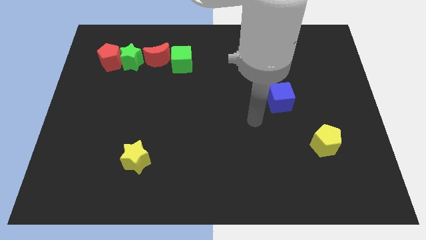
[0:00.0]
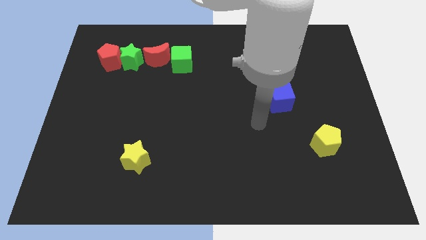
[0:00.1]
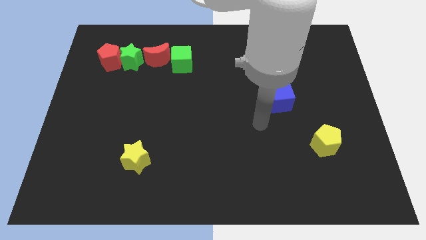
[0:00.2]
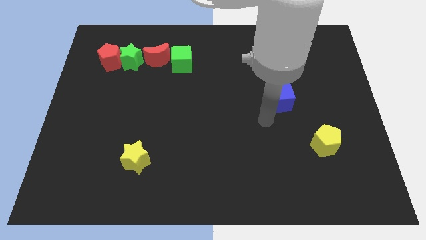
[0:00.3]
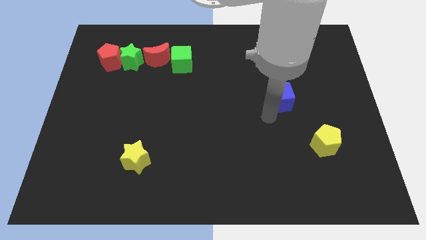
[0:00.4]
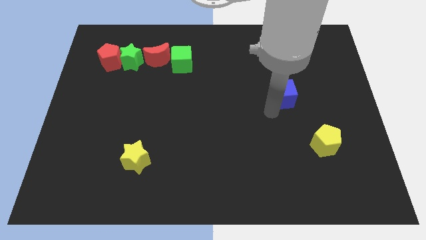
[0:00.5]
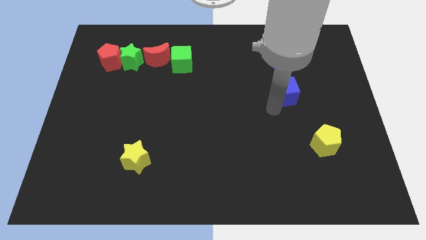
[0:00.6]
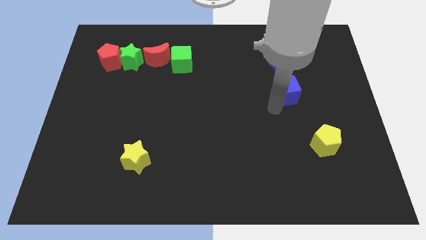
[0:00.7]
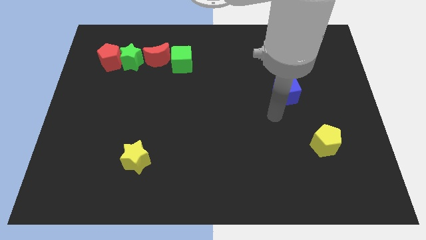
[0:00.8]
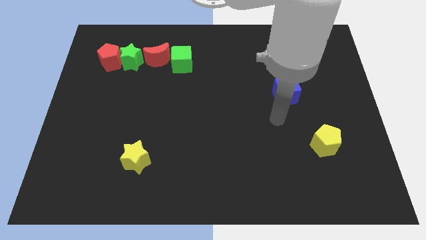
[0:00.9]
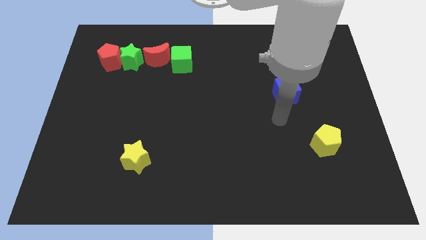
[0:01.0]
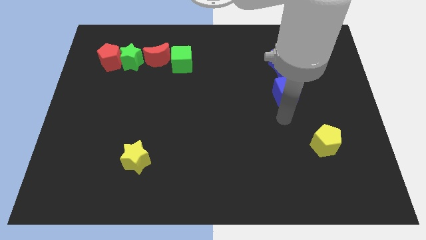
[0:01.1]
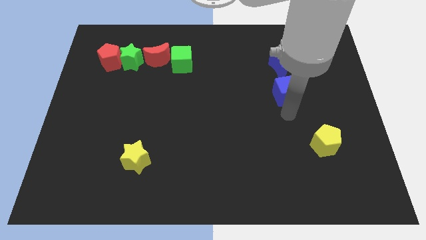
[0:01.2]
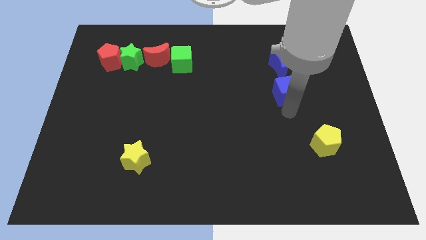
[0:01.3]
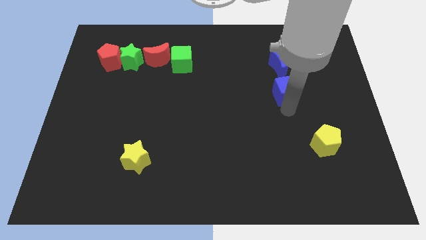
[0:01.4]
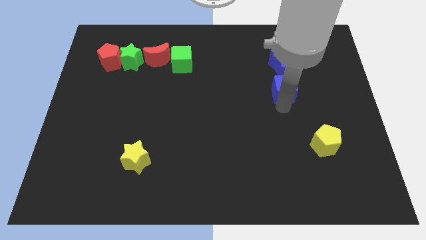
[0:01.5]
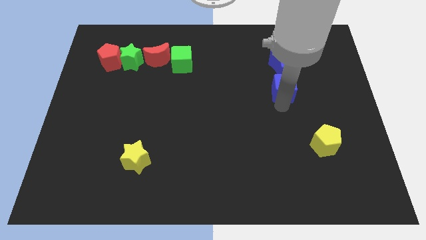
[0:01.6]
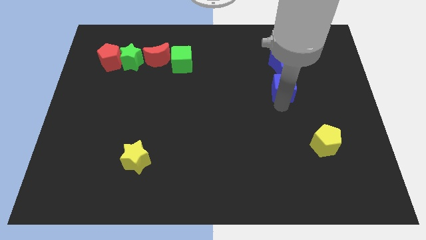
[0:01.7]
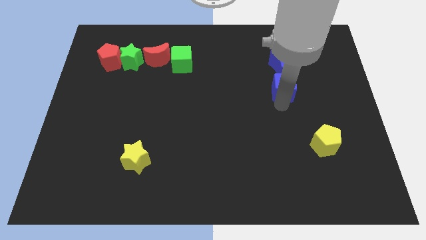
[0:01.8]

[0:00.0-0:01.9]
slightly touch your arm to the blue cube

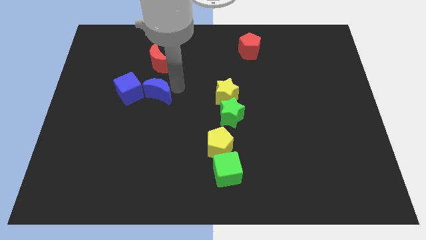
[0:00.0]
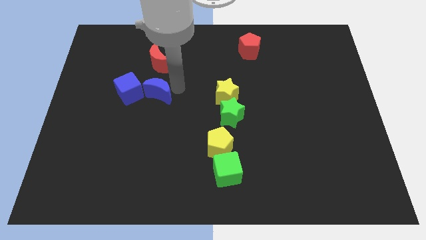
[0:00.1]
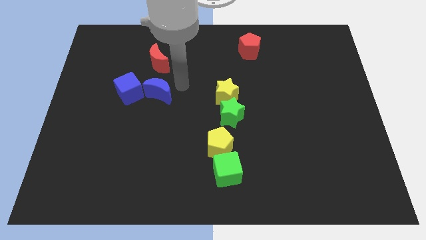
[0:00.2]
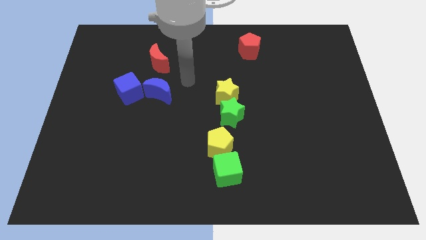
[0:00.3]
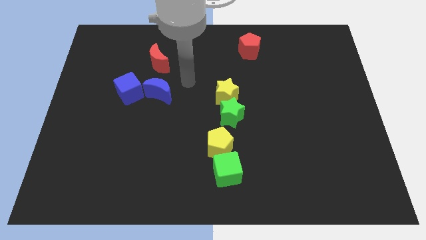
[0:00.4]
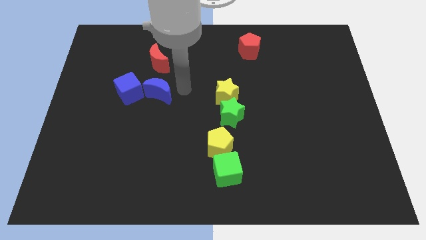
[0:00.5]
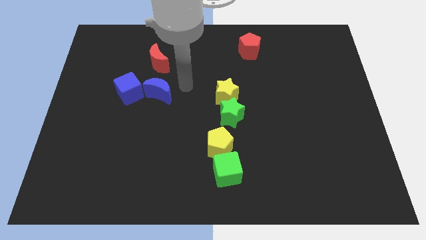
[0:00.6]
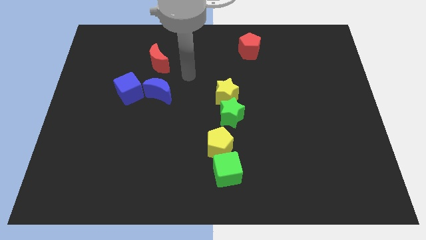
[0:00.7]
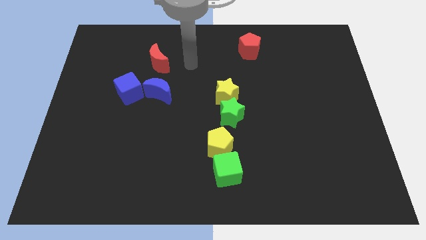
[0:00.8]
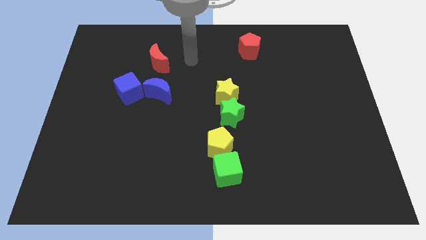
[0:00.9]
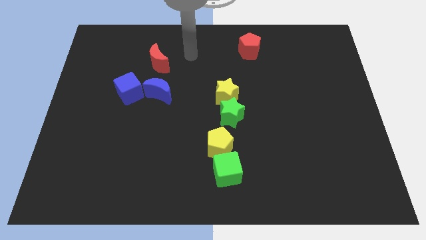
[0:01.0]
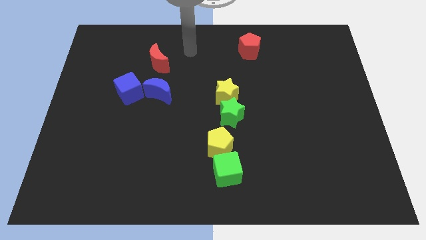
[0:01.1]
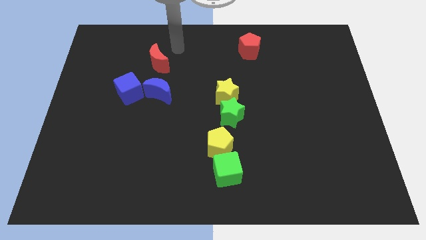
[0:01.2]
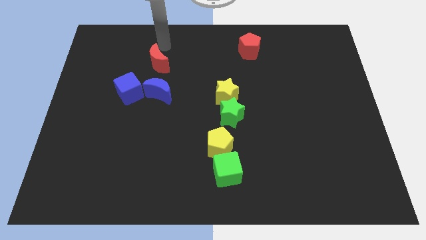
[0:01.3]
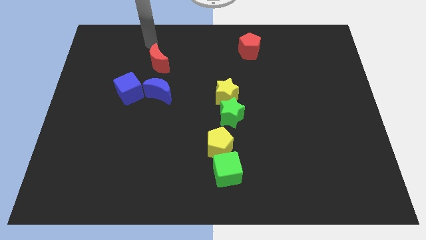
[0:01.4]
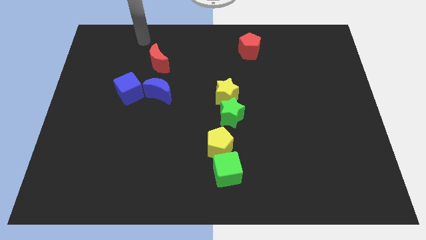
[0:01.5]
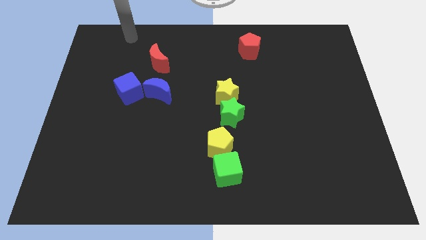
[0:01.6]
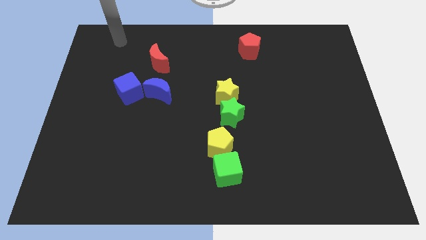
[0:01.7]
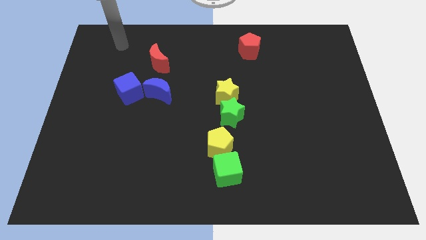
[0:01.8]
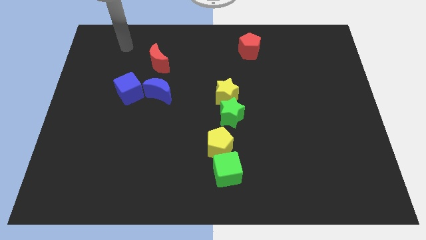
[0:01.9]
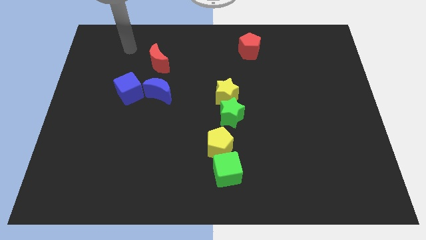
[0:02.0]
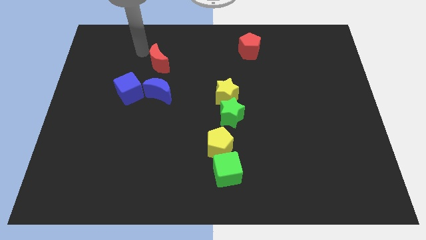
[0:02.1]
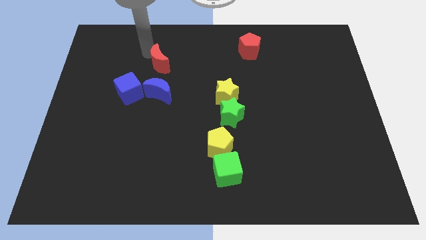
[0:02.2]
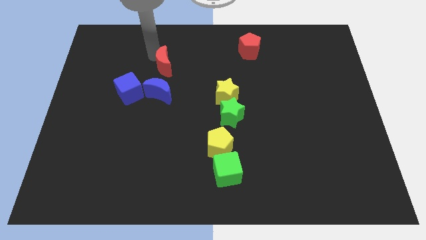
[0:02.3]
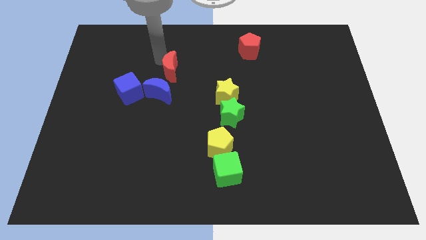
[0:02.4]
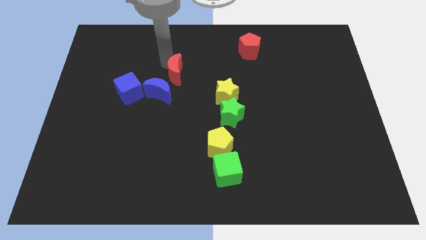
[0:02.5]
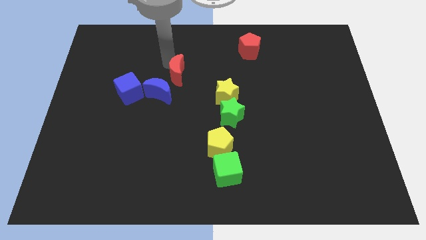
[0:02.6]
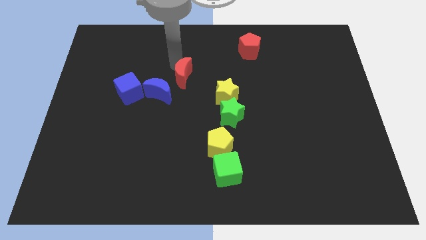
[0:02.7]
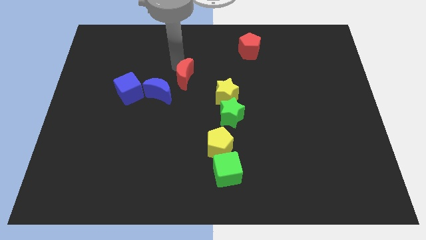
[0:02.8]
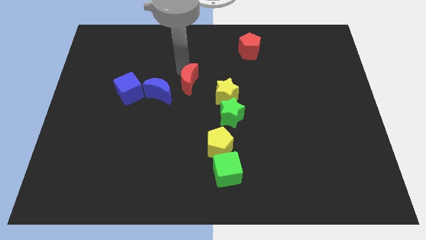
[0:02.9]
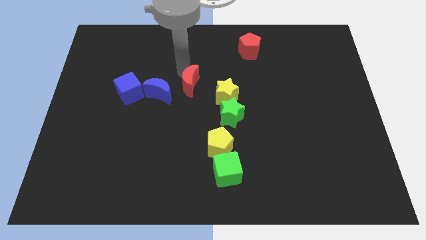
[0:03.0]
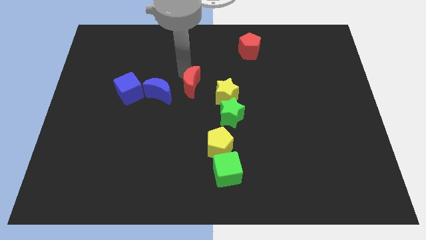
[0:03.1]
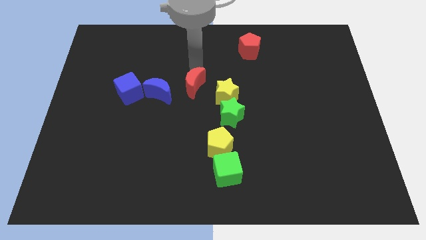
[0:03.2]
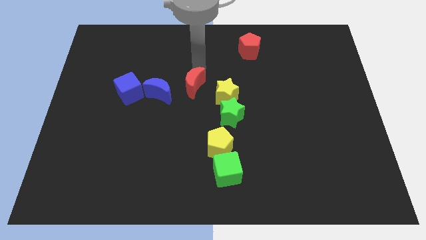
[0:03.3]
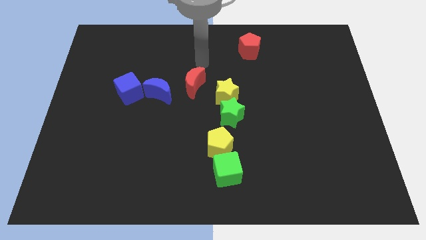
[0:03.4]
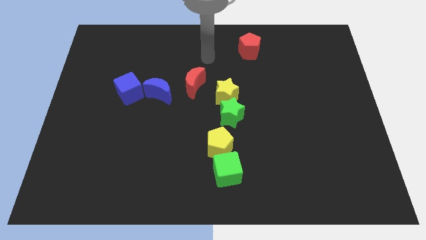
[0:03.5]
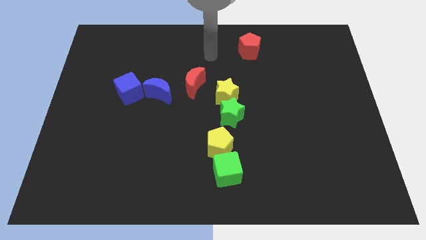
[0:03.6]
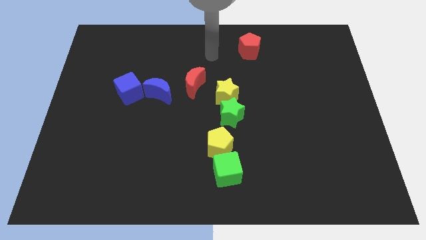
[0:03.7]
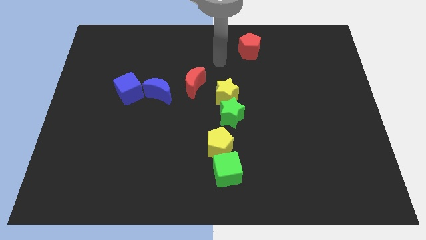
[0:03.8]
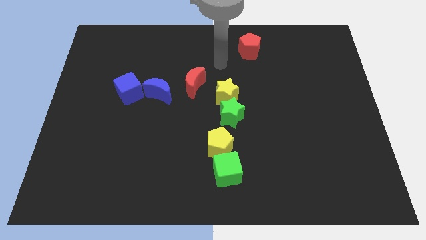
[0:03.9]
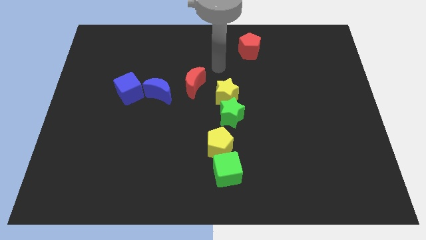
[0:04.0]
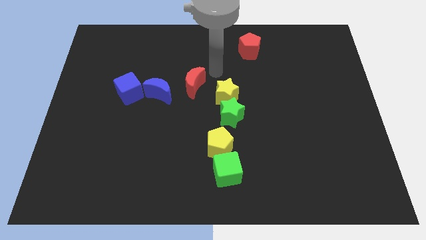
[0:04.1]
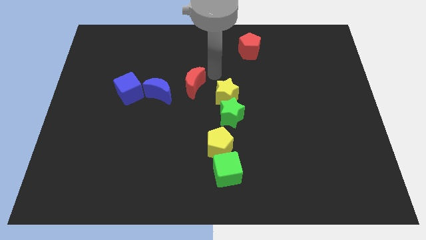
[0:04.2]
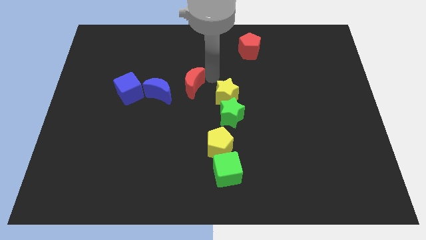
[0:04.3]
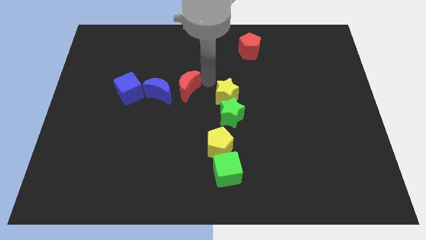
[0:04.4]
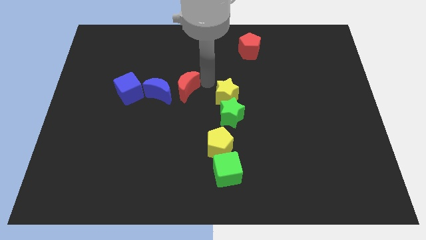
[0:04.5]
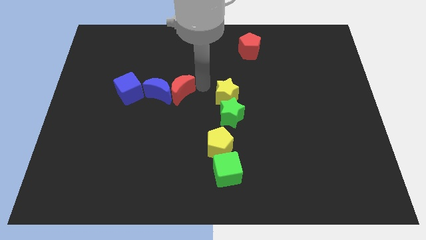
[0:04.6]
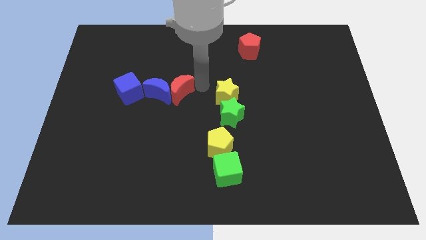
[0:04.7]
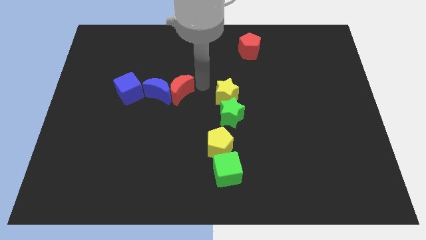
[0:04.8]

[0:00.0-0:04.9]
place the red crescent in between the yellow star and the blue moon

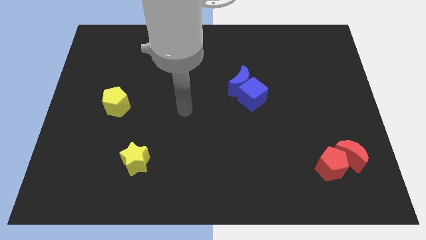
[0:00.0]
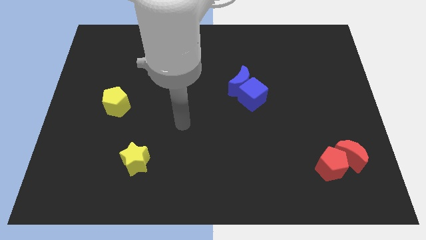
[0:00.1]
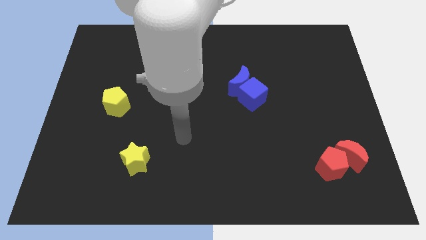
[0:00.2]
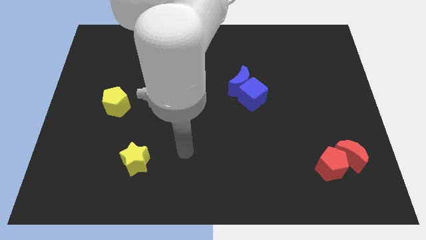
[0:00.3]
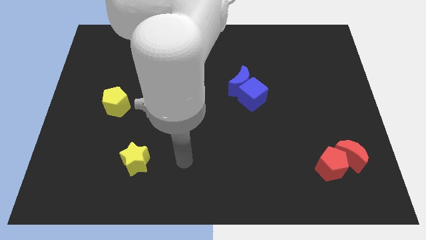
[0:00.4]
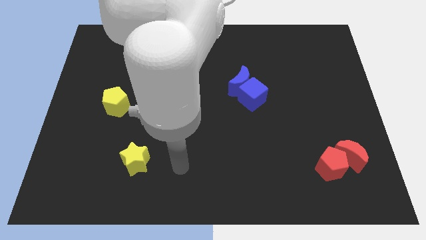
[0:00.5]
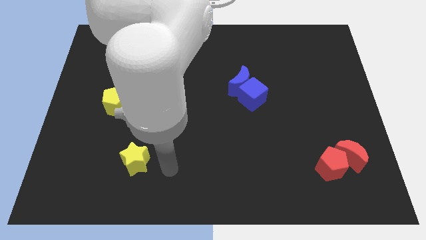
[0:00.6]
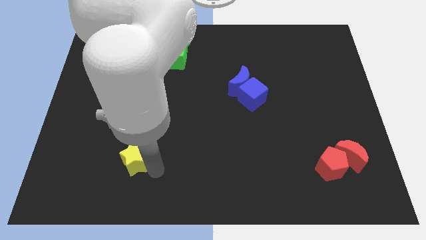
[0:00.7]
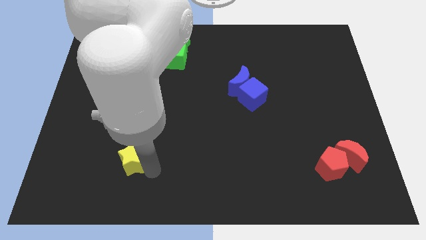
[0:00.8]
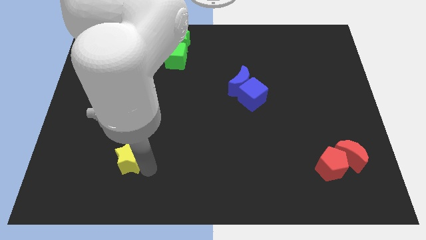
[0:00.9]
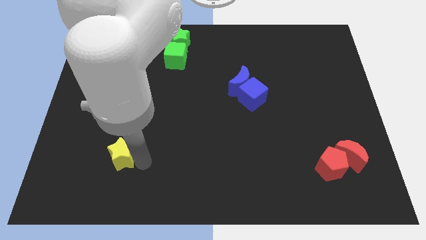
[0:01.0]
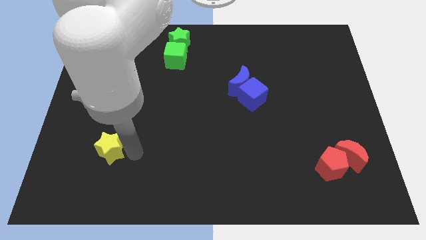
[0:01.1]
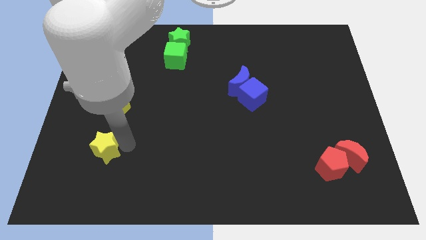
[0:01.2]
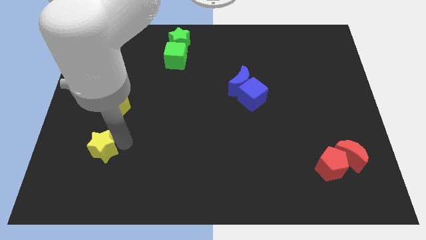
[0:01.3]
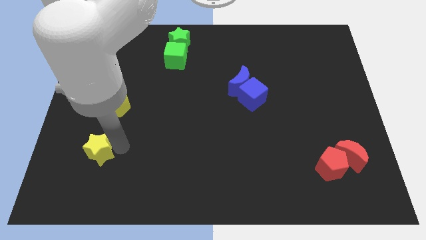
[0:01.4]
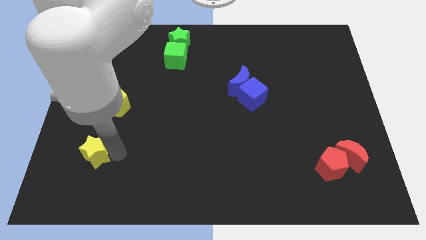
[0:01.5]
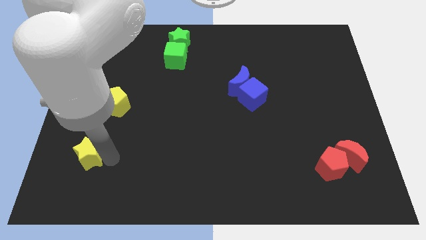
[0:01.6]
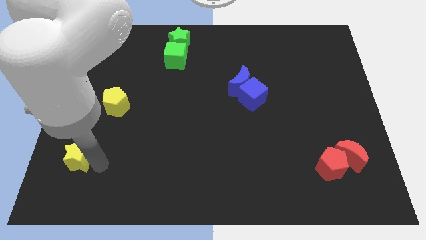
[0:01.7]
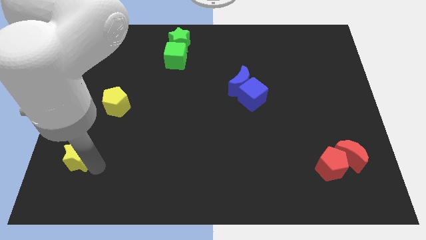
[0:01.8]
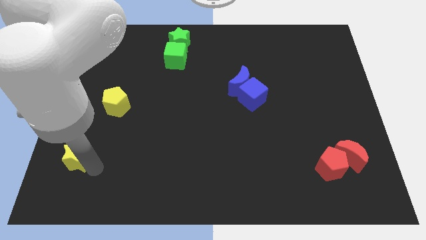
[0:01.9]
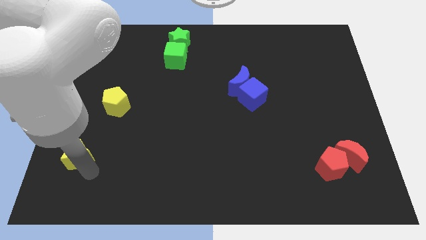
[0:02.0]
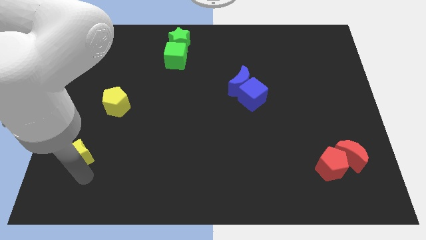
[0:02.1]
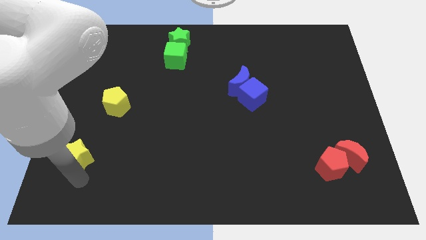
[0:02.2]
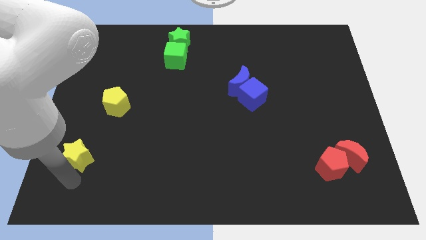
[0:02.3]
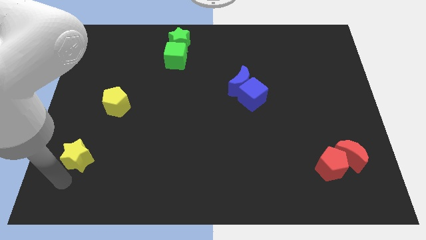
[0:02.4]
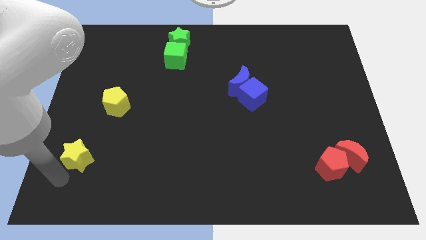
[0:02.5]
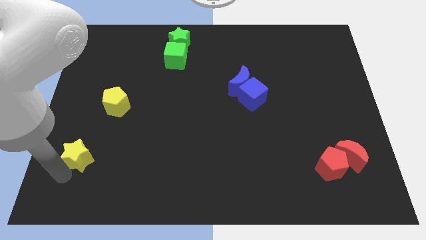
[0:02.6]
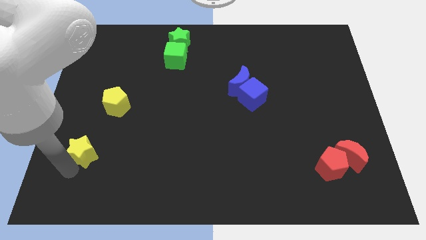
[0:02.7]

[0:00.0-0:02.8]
place the yellow star diagonal to the group of blue blocks
